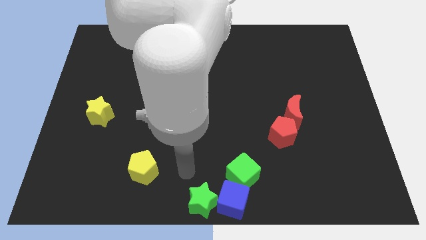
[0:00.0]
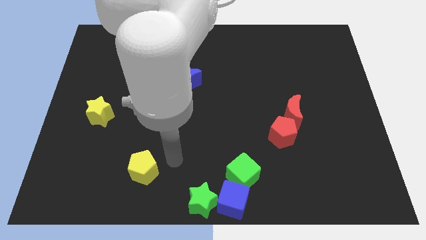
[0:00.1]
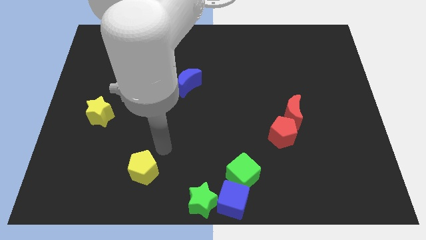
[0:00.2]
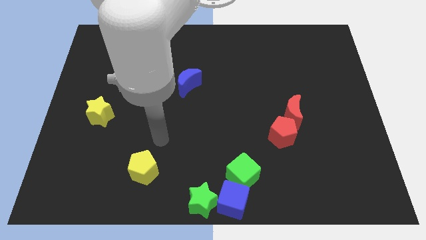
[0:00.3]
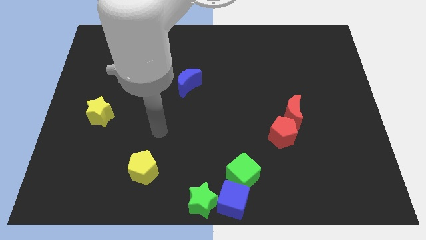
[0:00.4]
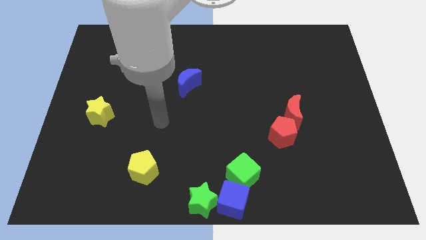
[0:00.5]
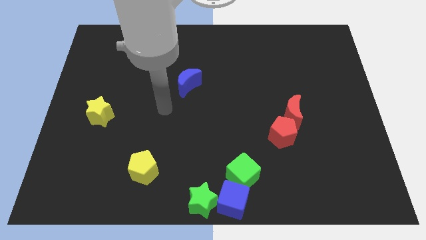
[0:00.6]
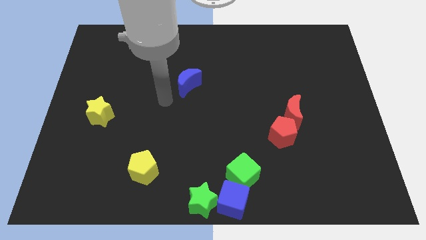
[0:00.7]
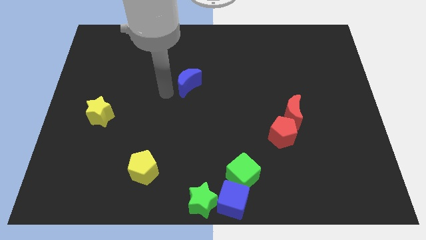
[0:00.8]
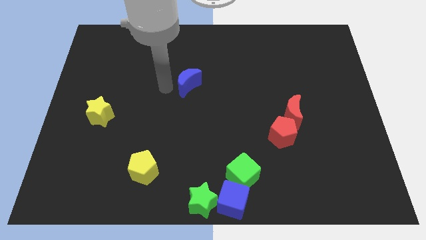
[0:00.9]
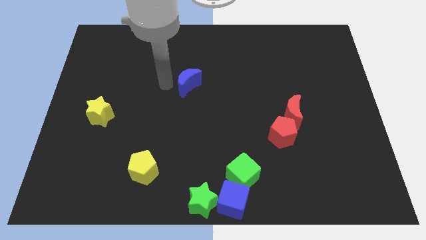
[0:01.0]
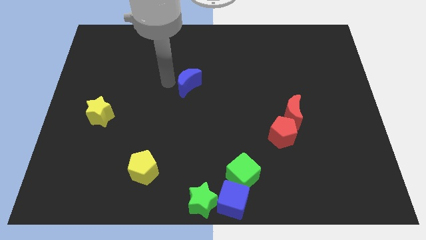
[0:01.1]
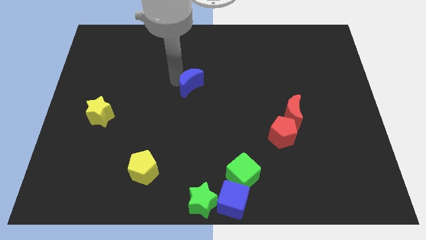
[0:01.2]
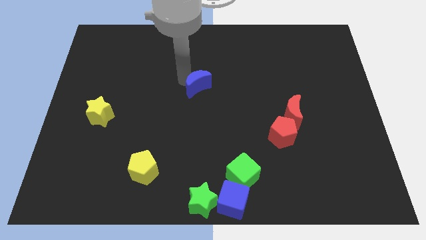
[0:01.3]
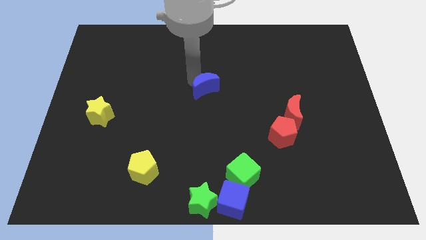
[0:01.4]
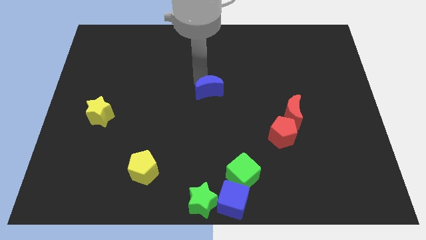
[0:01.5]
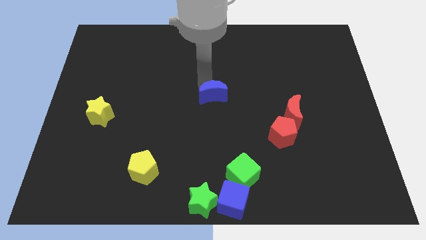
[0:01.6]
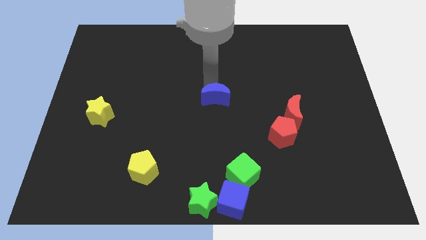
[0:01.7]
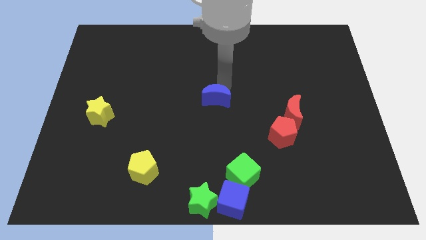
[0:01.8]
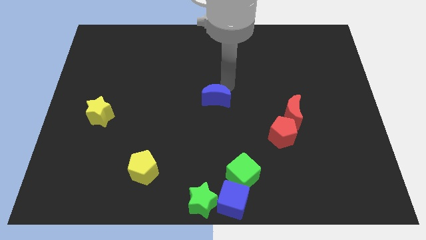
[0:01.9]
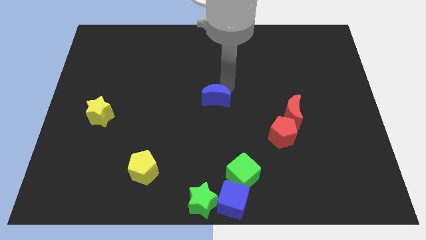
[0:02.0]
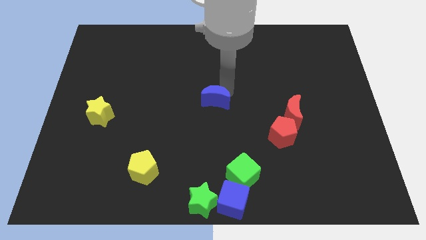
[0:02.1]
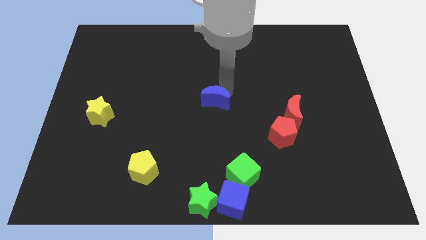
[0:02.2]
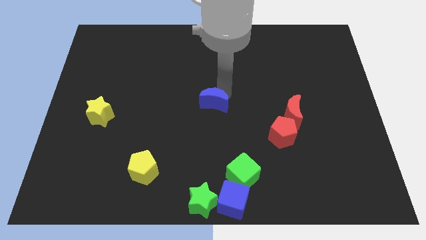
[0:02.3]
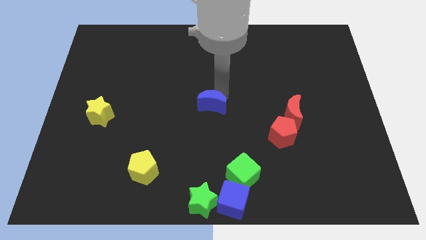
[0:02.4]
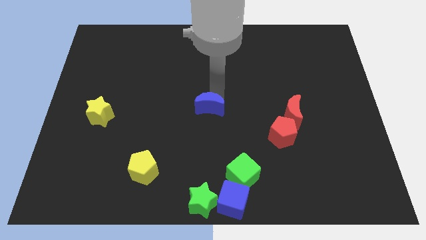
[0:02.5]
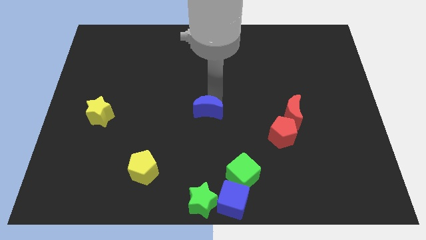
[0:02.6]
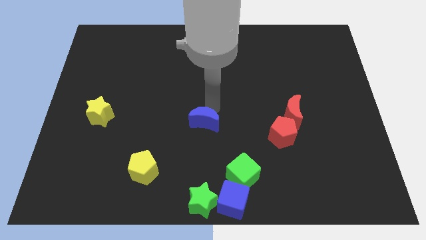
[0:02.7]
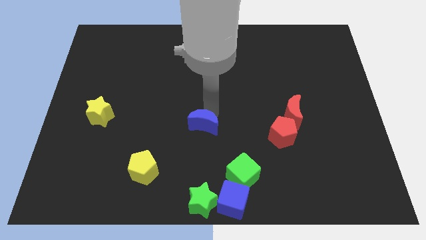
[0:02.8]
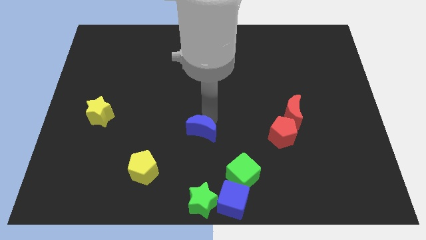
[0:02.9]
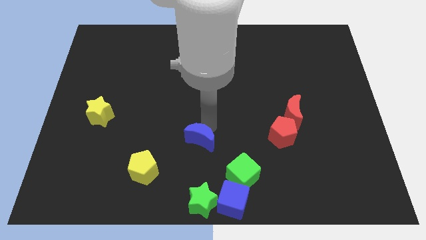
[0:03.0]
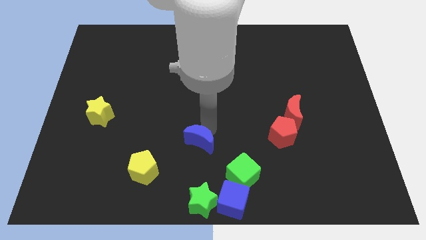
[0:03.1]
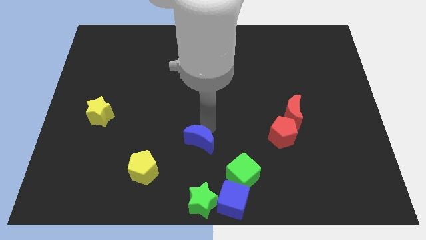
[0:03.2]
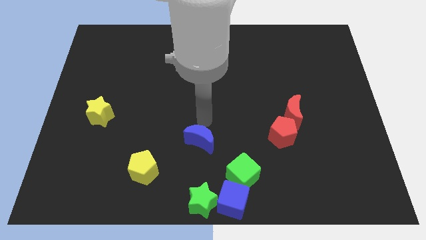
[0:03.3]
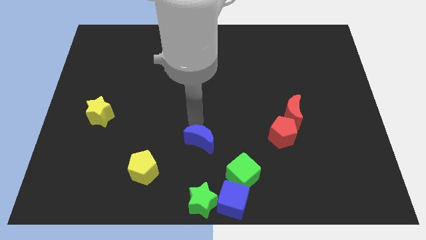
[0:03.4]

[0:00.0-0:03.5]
place the blue crescent vertically above the green star

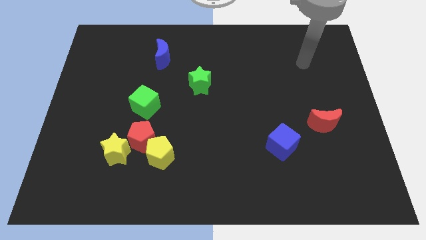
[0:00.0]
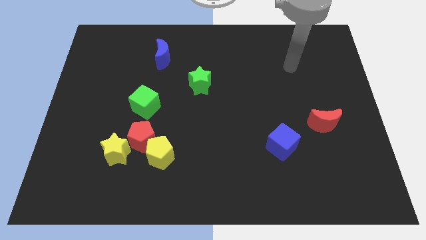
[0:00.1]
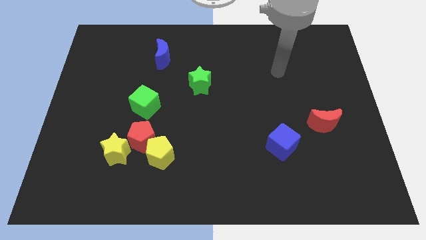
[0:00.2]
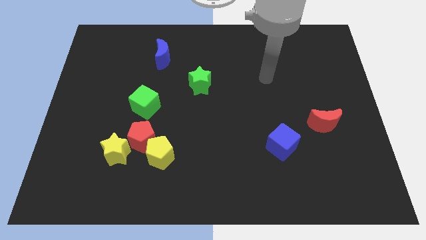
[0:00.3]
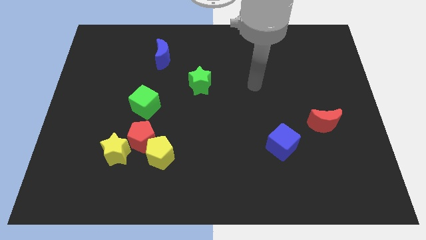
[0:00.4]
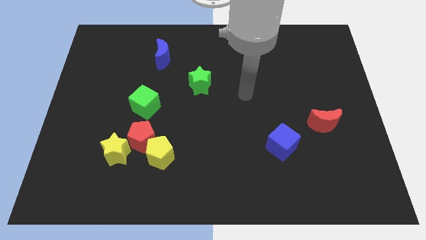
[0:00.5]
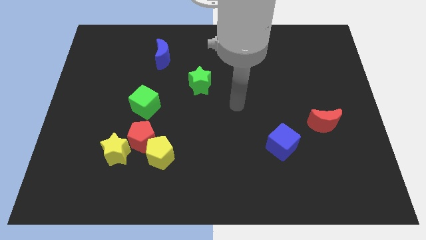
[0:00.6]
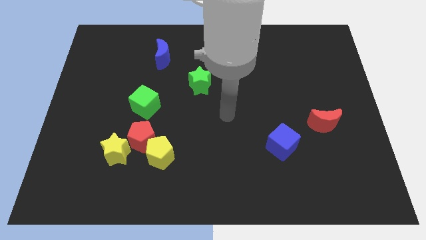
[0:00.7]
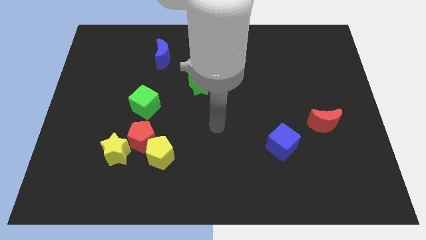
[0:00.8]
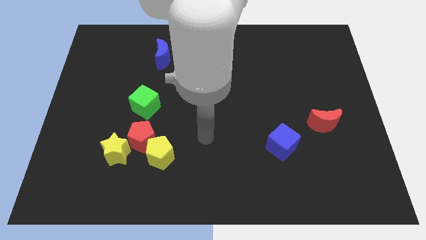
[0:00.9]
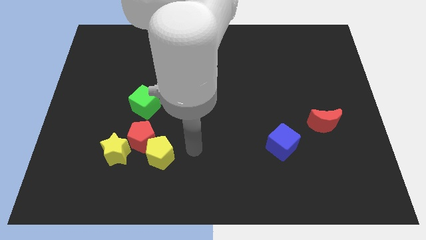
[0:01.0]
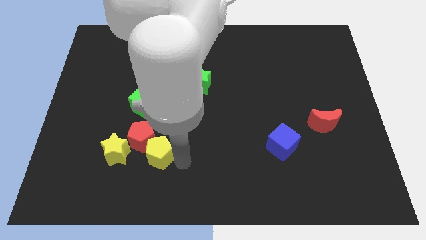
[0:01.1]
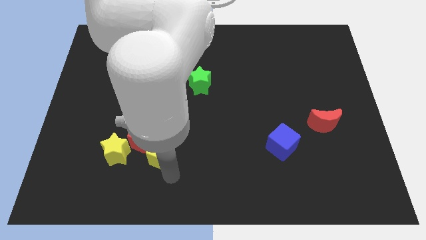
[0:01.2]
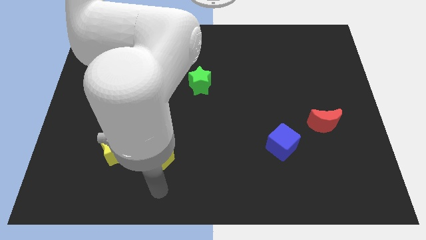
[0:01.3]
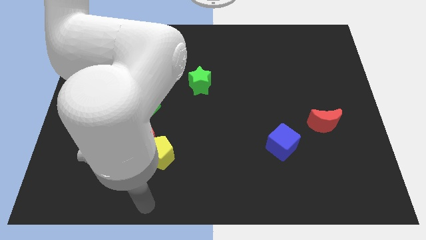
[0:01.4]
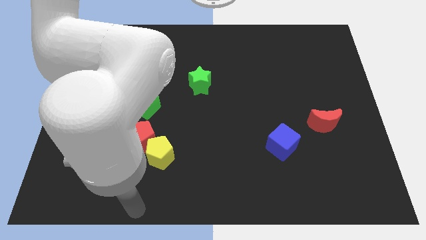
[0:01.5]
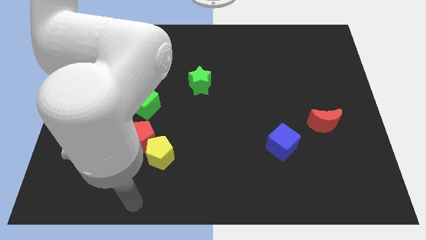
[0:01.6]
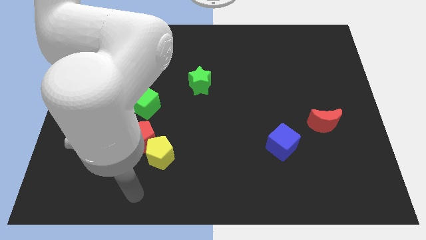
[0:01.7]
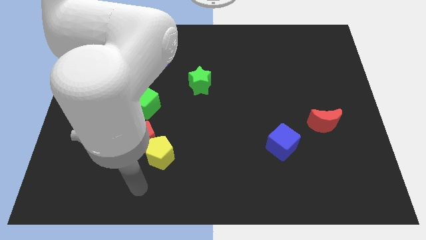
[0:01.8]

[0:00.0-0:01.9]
move your arm towards the bottom side

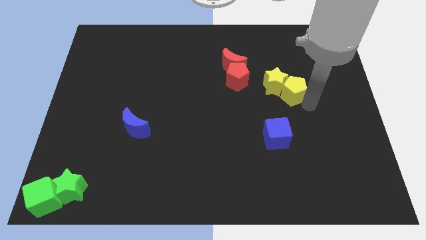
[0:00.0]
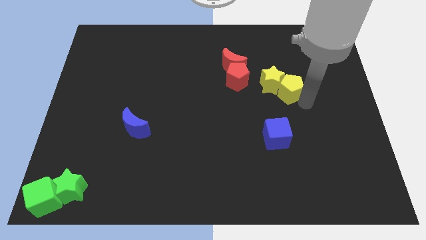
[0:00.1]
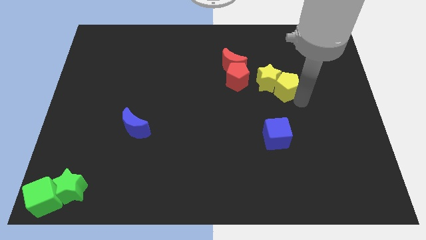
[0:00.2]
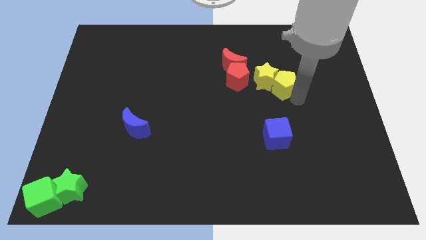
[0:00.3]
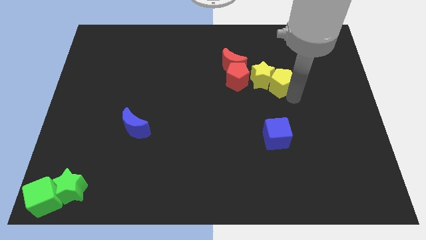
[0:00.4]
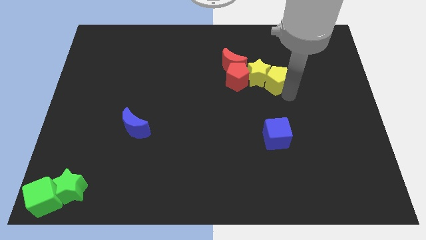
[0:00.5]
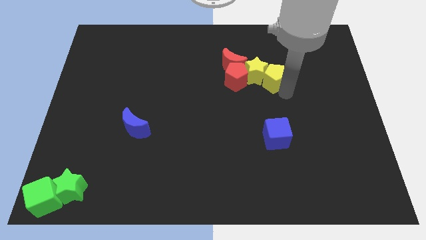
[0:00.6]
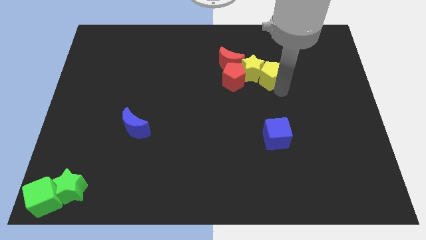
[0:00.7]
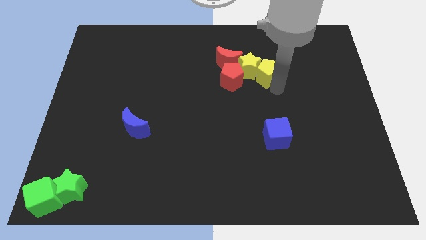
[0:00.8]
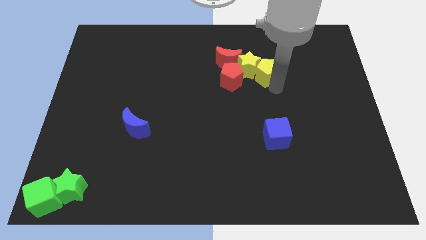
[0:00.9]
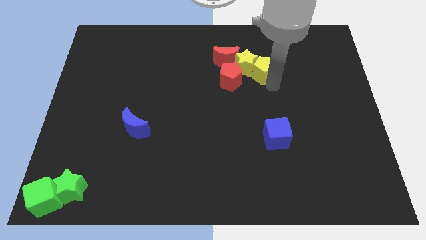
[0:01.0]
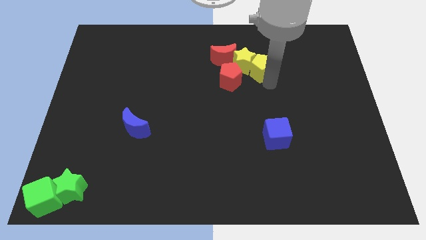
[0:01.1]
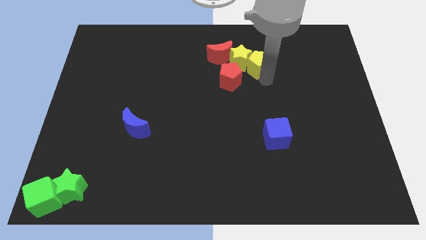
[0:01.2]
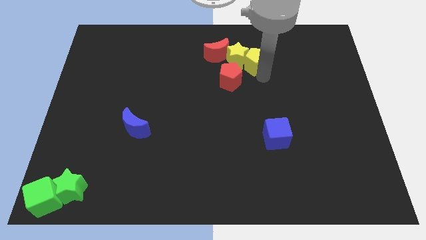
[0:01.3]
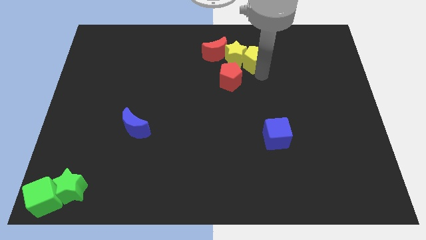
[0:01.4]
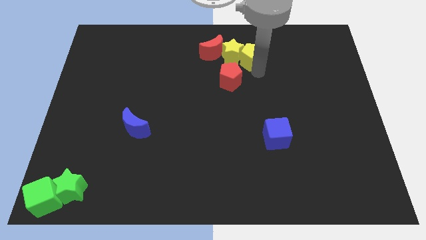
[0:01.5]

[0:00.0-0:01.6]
push the yellow star into the red blocks

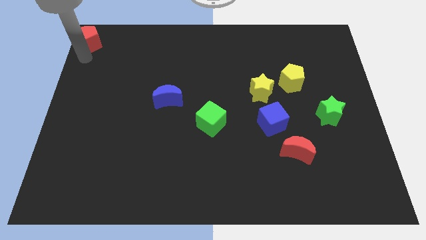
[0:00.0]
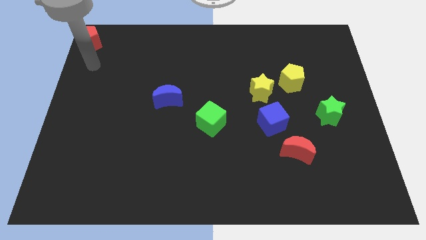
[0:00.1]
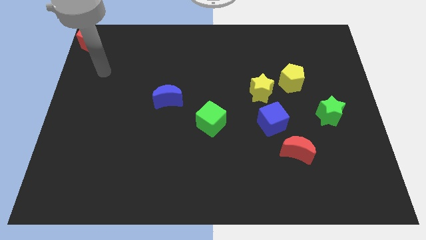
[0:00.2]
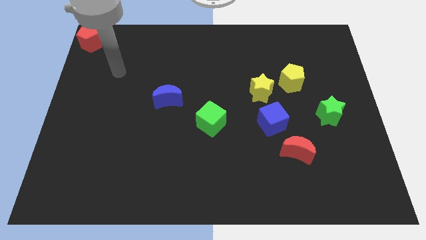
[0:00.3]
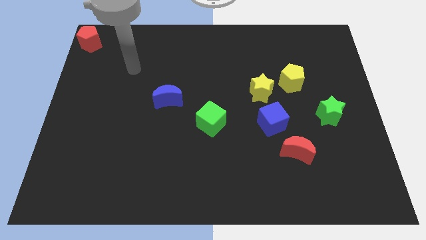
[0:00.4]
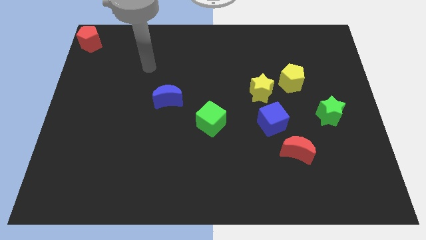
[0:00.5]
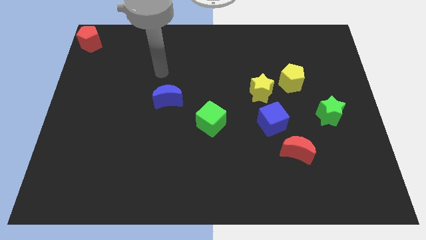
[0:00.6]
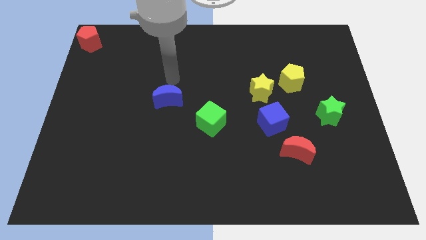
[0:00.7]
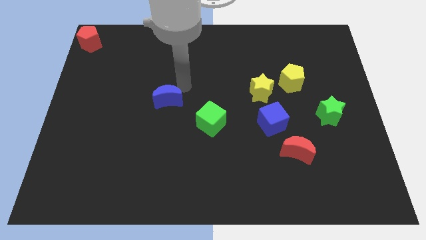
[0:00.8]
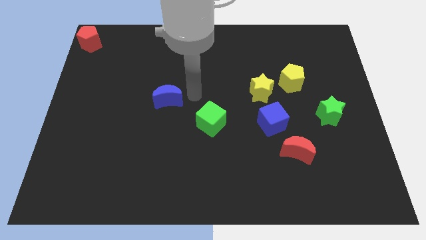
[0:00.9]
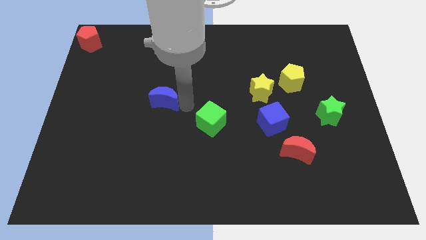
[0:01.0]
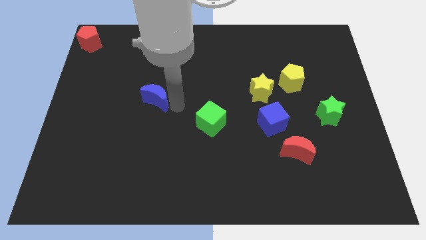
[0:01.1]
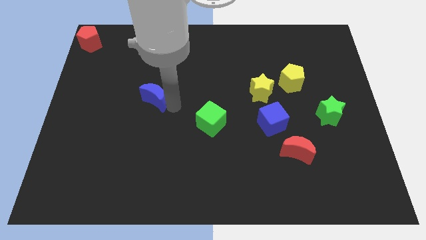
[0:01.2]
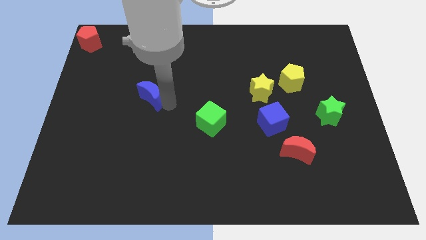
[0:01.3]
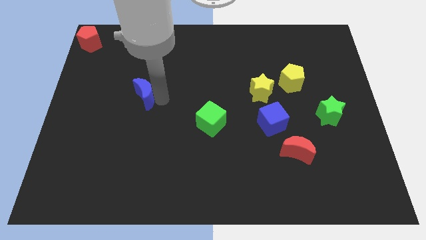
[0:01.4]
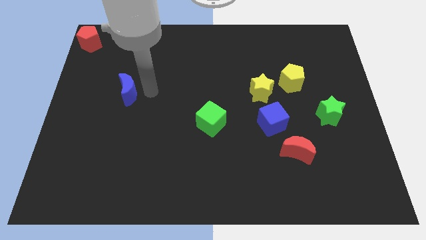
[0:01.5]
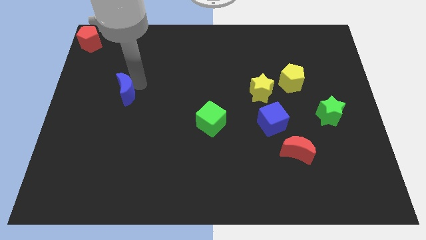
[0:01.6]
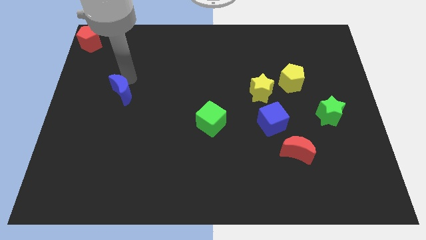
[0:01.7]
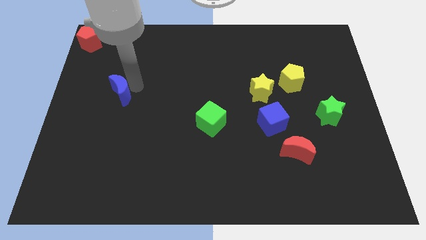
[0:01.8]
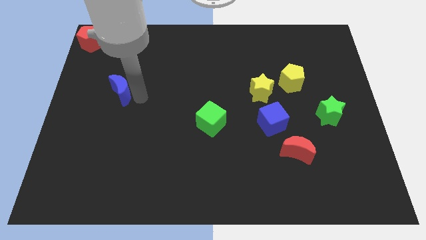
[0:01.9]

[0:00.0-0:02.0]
move blue crescent towards red pentagon
